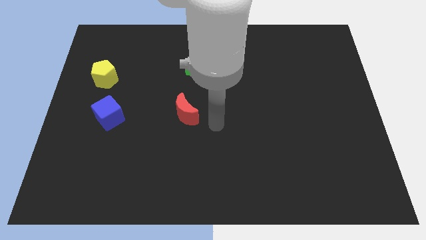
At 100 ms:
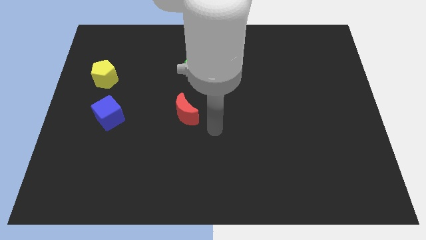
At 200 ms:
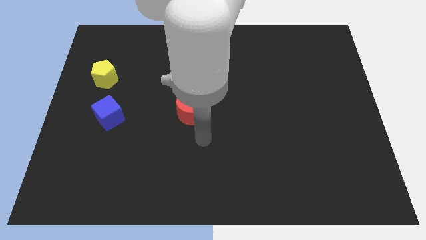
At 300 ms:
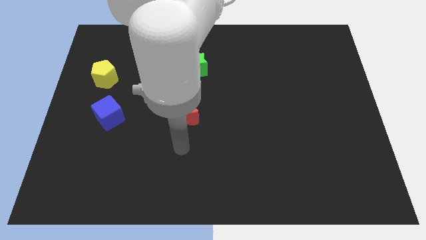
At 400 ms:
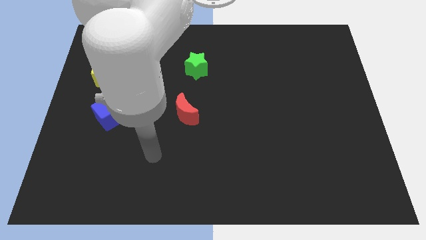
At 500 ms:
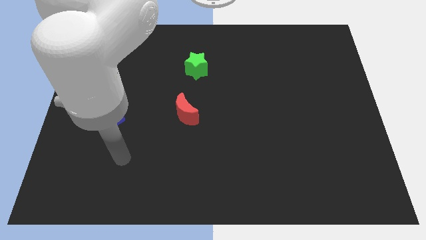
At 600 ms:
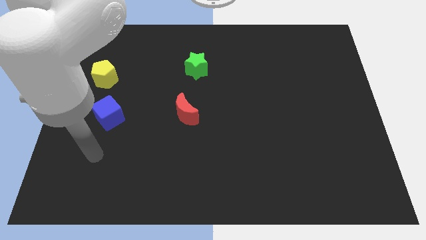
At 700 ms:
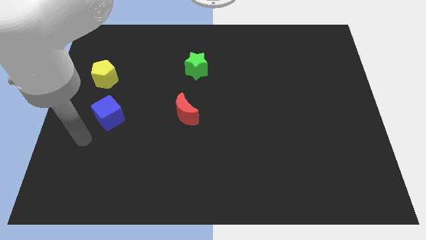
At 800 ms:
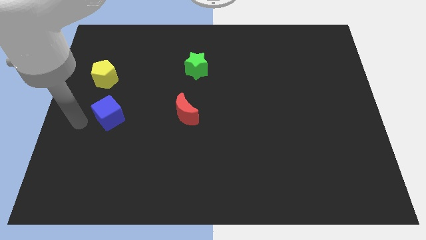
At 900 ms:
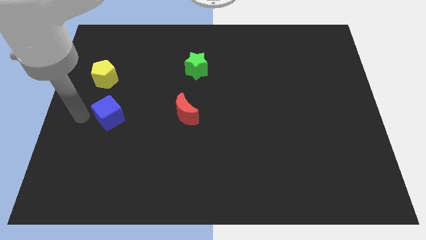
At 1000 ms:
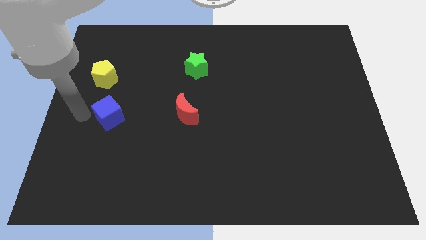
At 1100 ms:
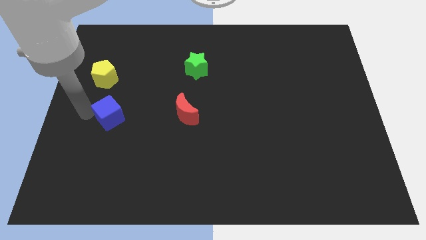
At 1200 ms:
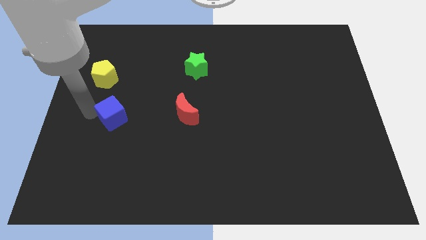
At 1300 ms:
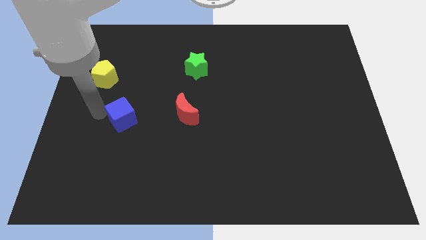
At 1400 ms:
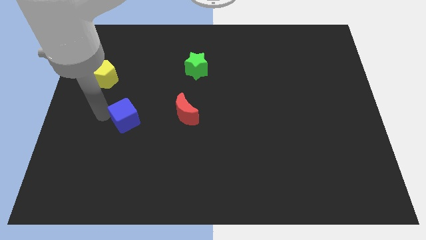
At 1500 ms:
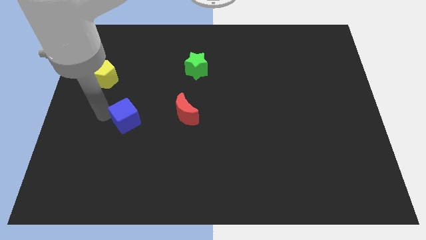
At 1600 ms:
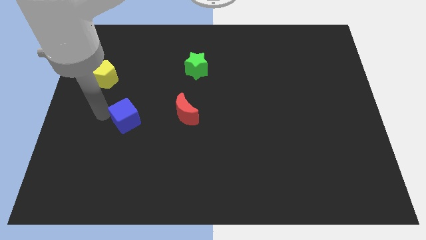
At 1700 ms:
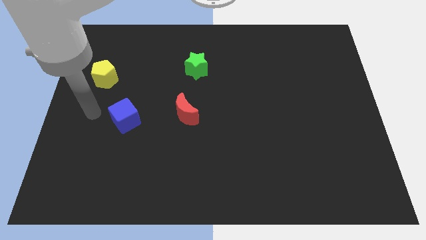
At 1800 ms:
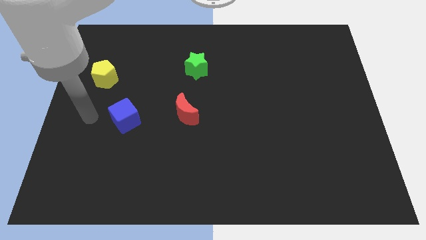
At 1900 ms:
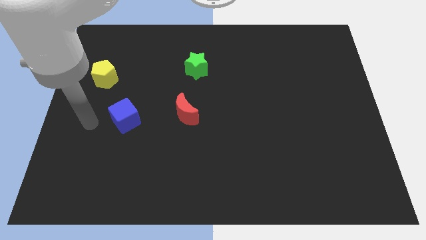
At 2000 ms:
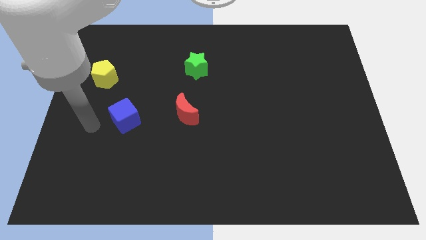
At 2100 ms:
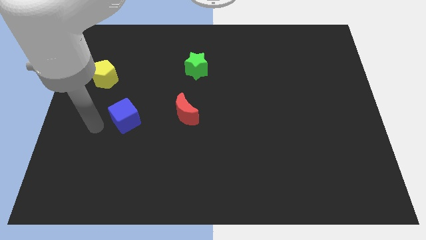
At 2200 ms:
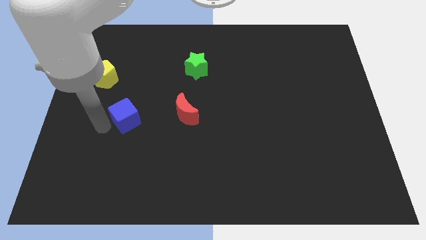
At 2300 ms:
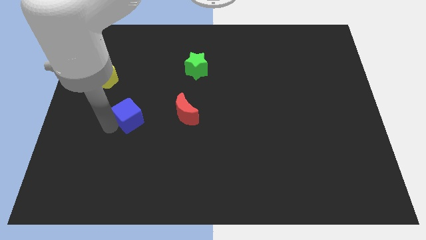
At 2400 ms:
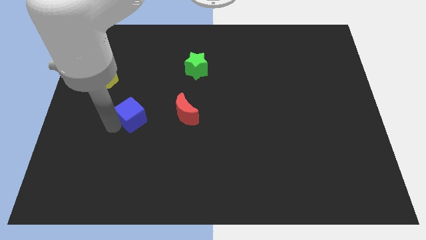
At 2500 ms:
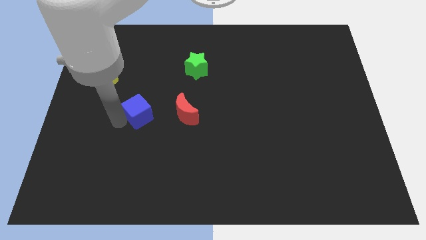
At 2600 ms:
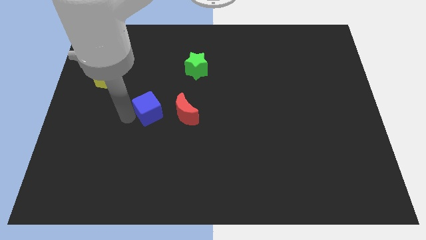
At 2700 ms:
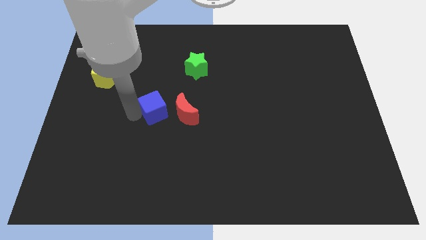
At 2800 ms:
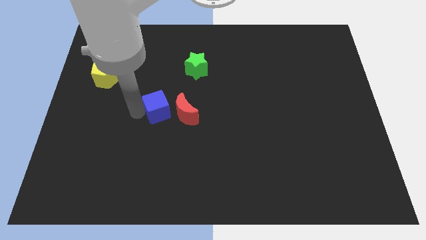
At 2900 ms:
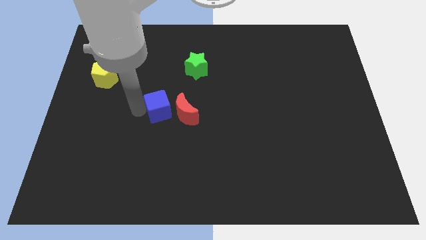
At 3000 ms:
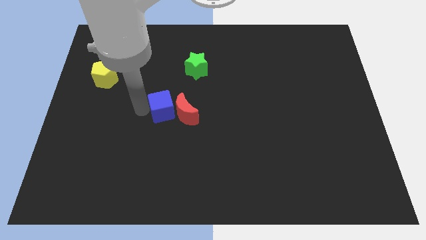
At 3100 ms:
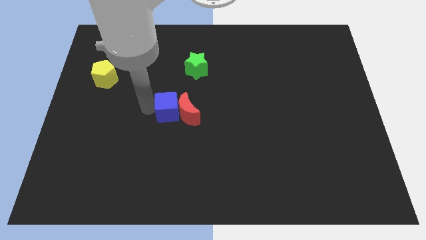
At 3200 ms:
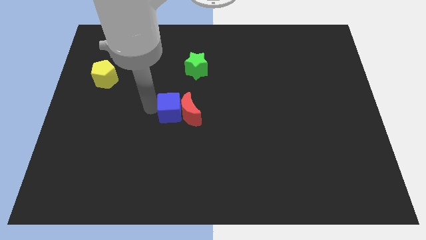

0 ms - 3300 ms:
slide the blue cube towards the red moon

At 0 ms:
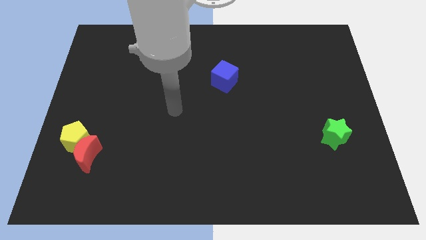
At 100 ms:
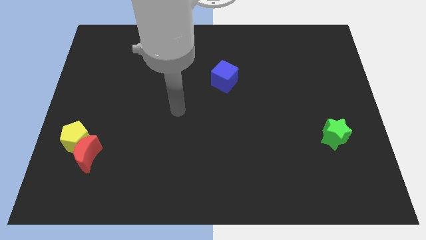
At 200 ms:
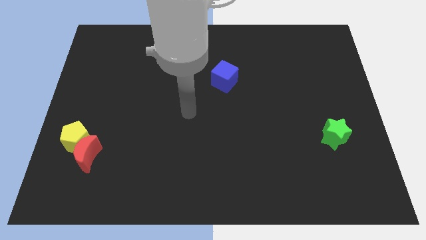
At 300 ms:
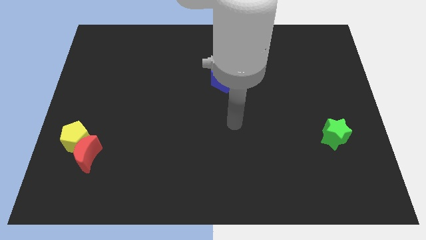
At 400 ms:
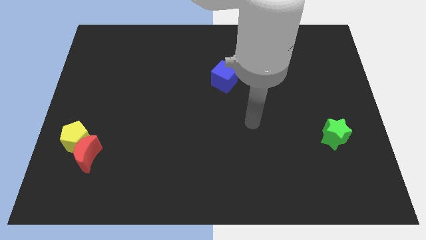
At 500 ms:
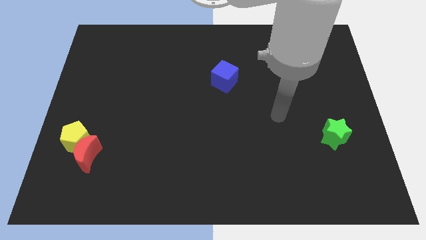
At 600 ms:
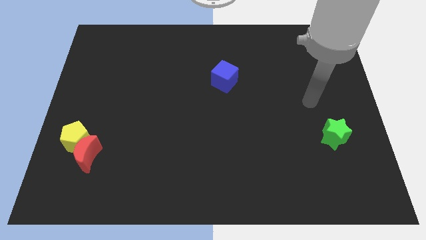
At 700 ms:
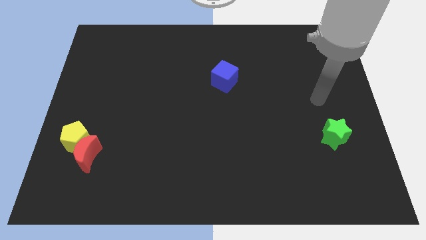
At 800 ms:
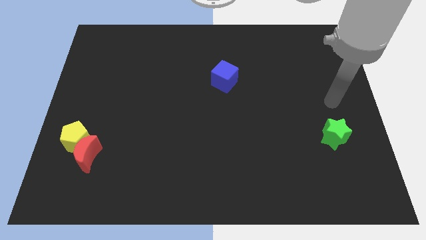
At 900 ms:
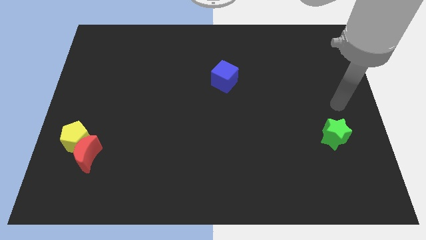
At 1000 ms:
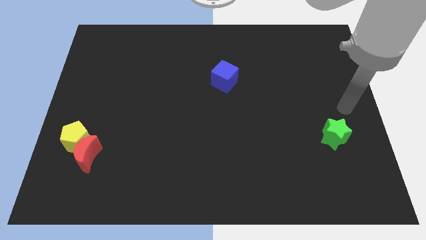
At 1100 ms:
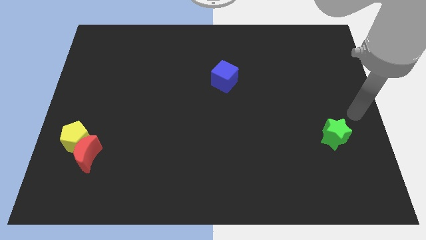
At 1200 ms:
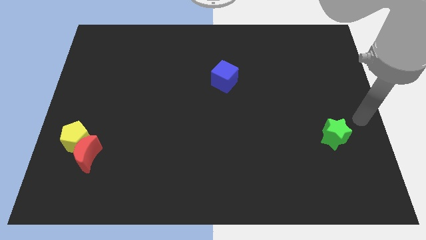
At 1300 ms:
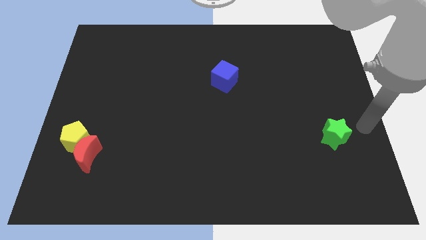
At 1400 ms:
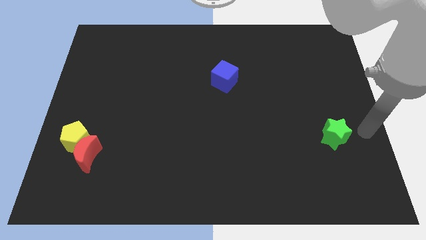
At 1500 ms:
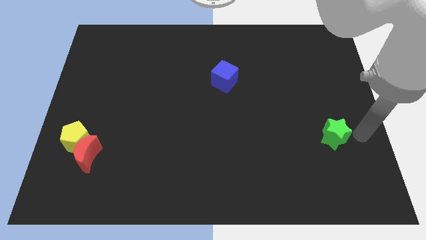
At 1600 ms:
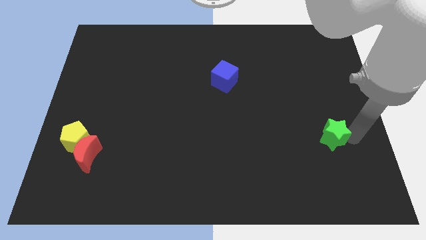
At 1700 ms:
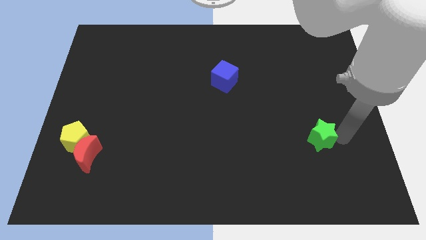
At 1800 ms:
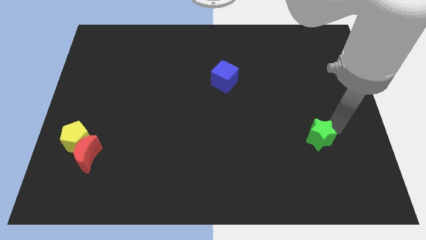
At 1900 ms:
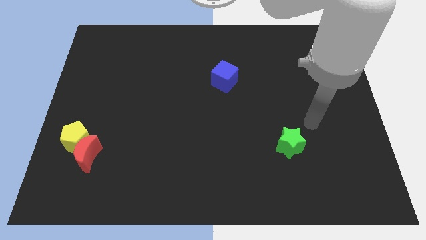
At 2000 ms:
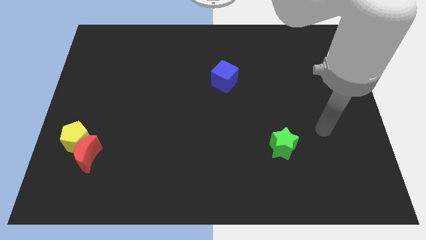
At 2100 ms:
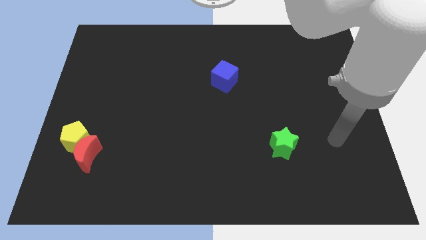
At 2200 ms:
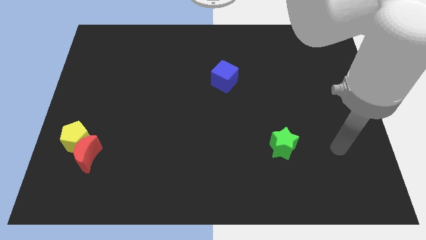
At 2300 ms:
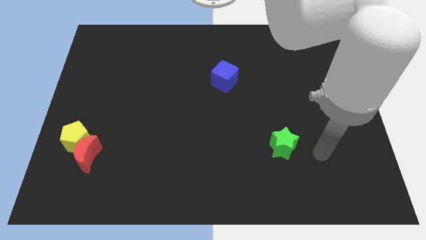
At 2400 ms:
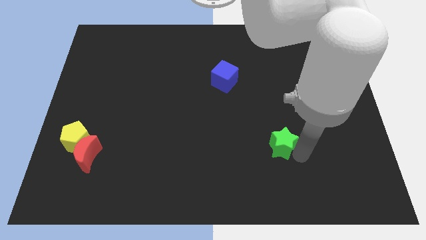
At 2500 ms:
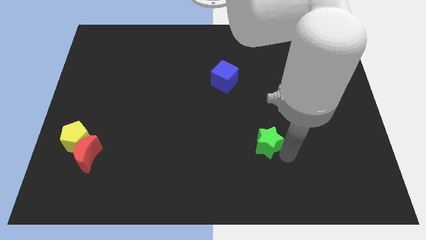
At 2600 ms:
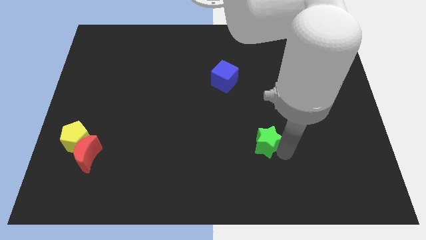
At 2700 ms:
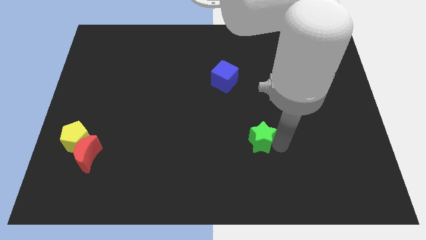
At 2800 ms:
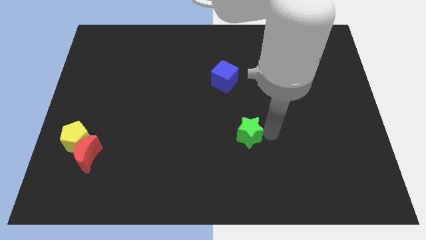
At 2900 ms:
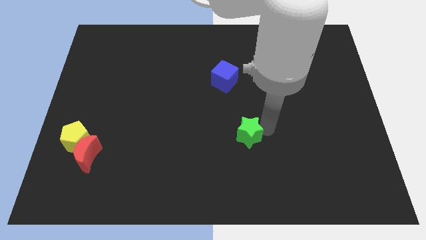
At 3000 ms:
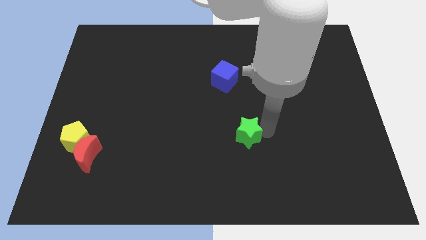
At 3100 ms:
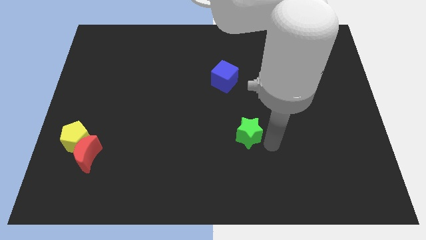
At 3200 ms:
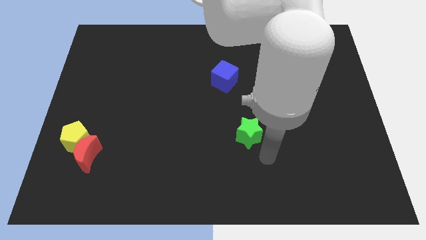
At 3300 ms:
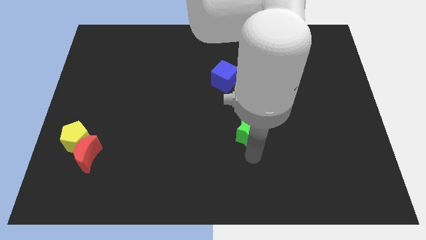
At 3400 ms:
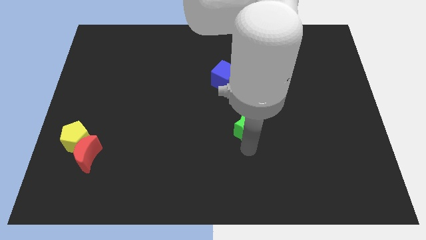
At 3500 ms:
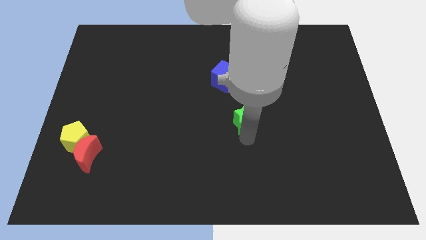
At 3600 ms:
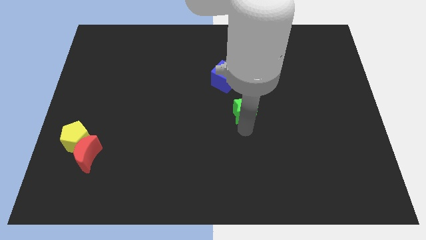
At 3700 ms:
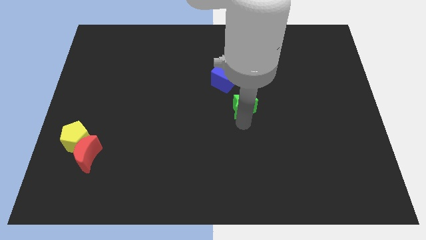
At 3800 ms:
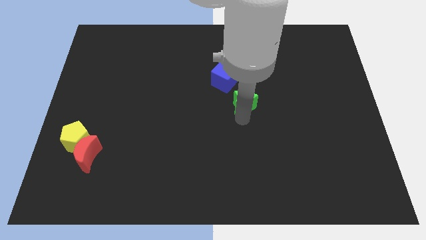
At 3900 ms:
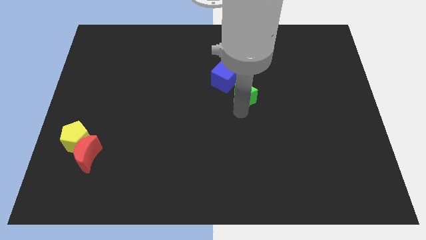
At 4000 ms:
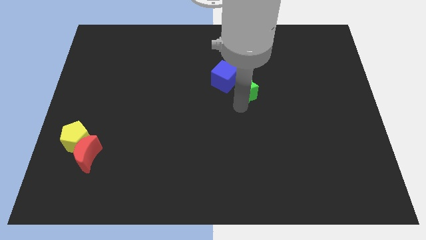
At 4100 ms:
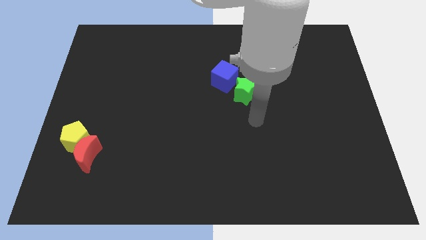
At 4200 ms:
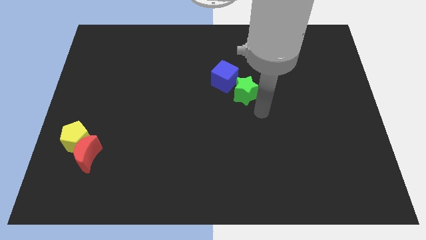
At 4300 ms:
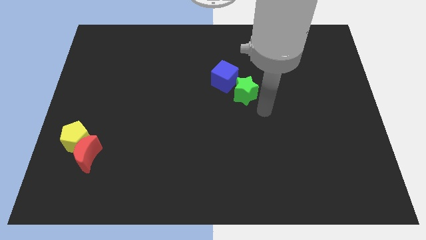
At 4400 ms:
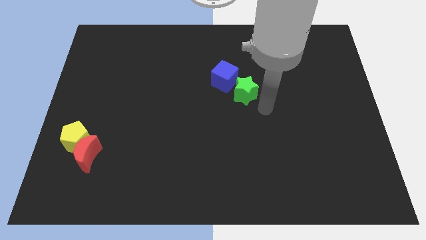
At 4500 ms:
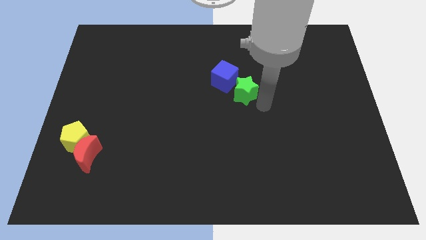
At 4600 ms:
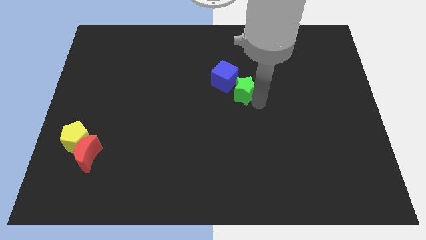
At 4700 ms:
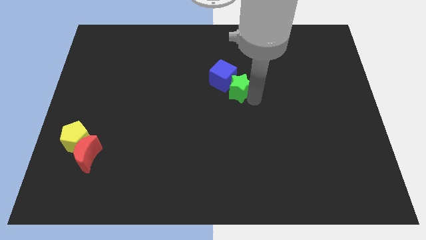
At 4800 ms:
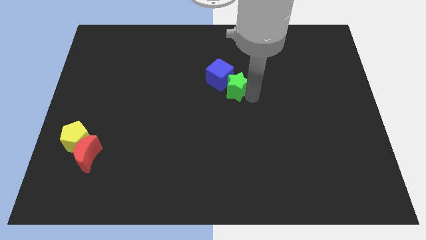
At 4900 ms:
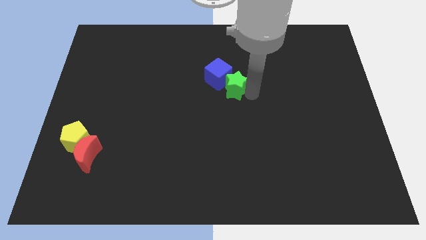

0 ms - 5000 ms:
put the star close to the cube

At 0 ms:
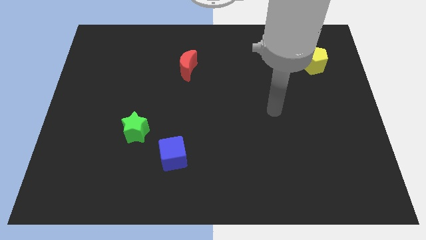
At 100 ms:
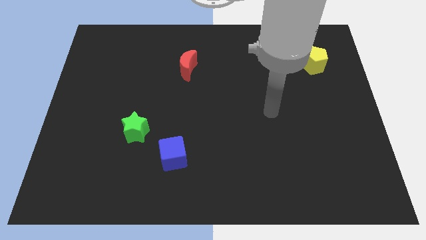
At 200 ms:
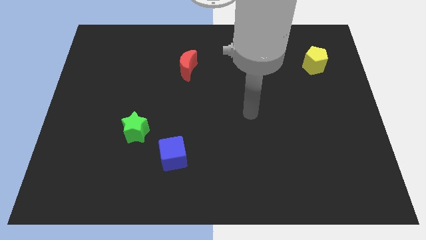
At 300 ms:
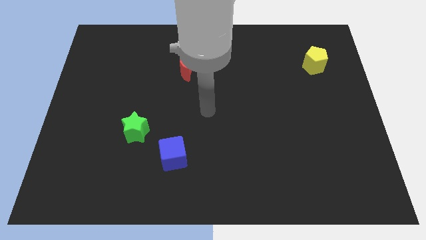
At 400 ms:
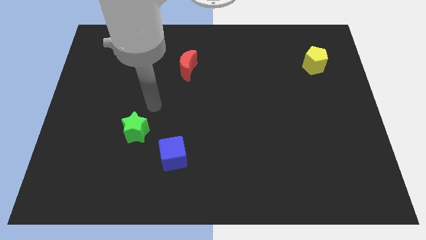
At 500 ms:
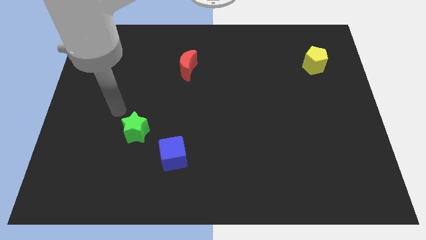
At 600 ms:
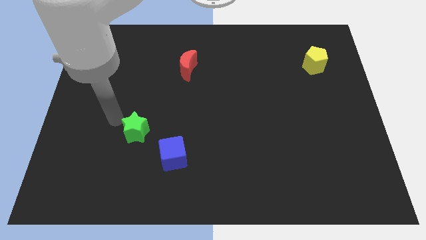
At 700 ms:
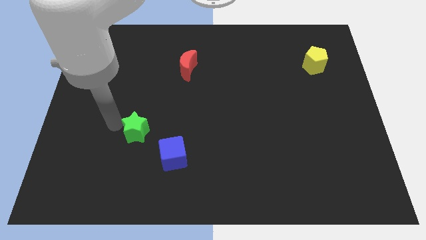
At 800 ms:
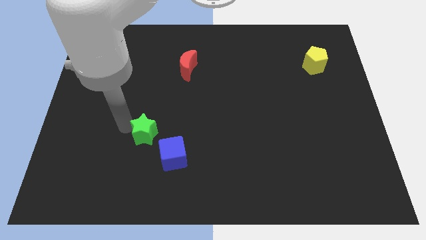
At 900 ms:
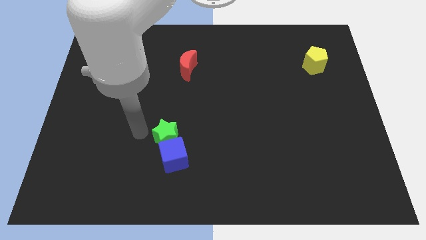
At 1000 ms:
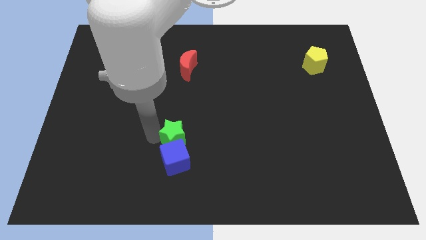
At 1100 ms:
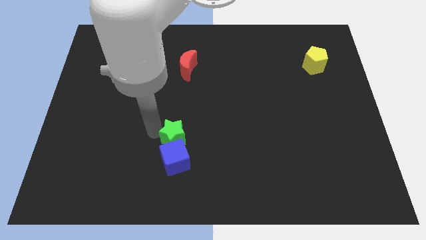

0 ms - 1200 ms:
slide the green block next to the blue block
